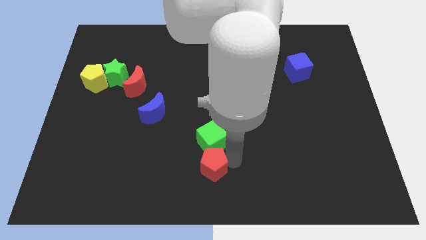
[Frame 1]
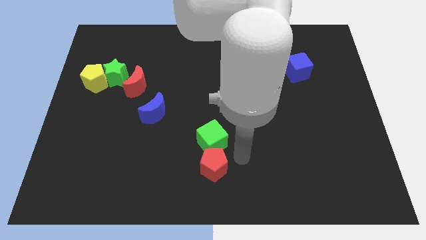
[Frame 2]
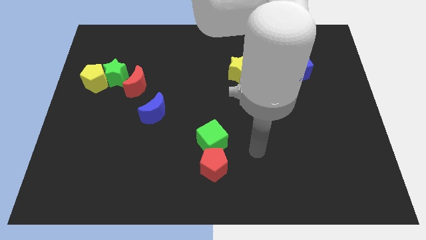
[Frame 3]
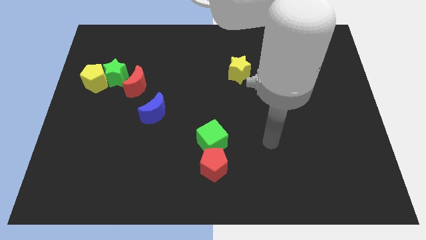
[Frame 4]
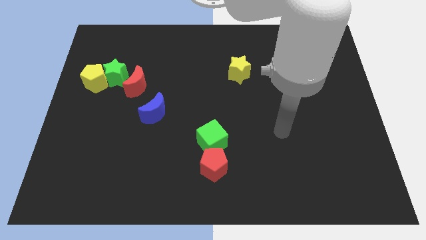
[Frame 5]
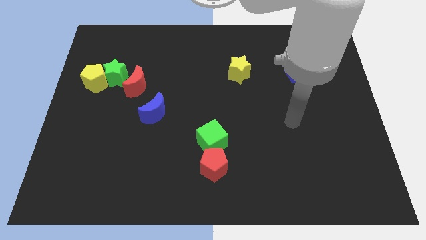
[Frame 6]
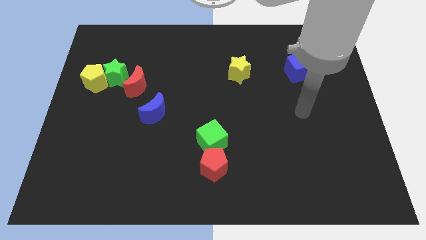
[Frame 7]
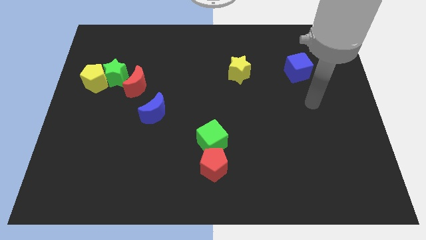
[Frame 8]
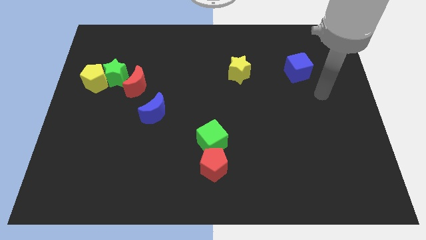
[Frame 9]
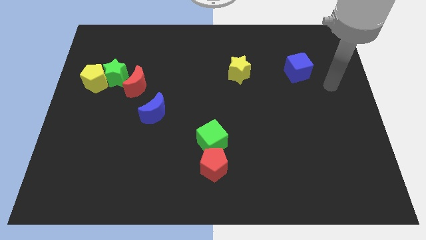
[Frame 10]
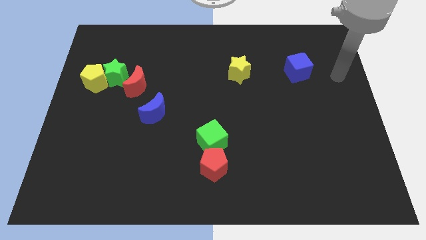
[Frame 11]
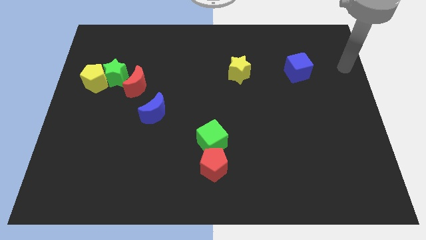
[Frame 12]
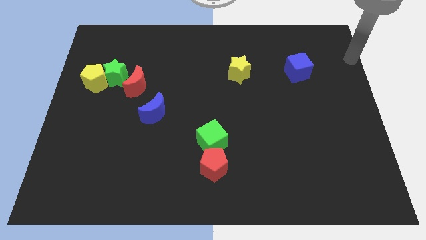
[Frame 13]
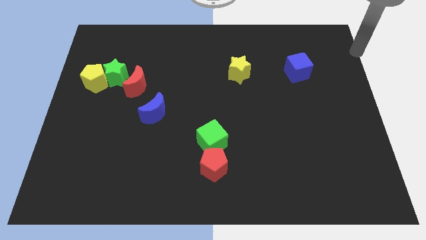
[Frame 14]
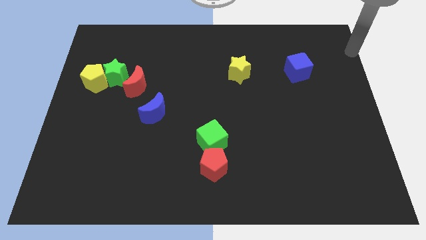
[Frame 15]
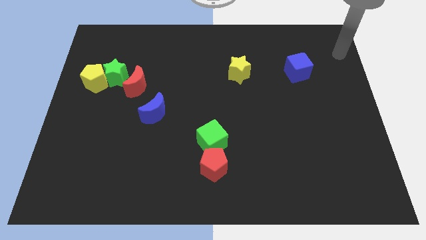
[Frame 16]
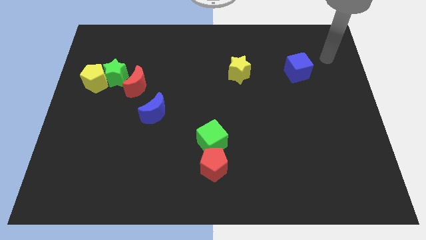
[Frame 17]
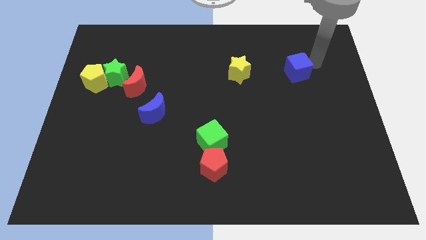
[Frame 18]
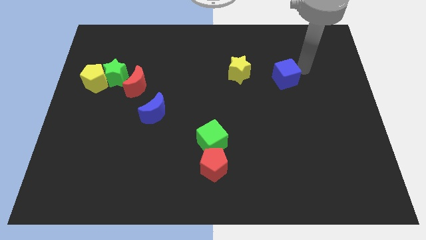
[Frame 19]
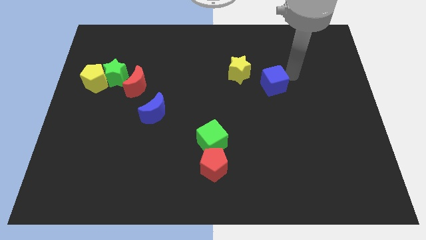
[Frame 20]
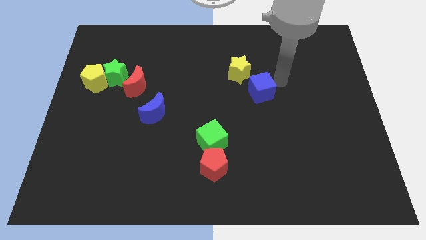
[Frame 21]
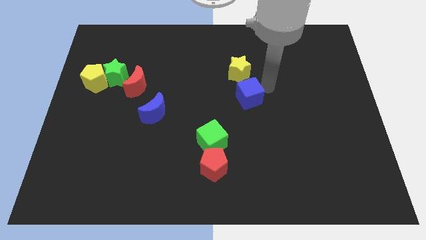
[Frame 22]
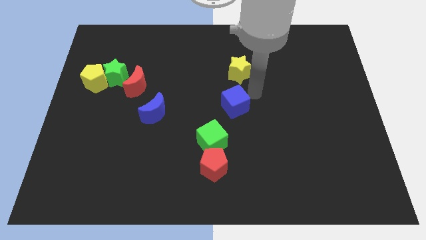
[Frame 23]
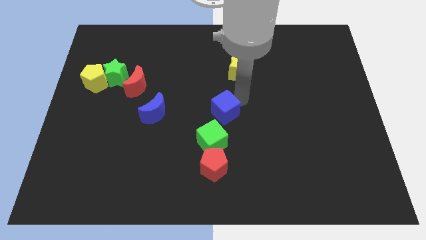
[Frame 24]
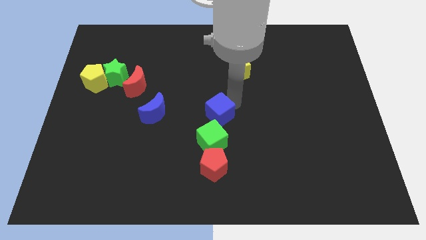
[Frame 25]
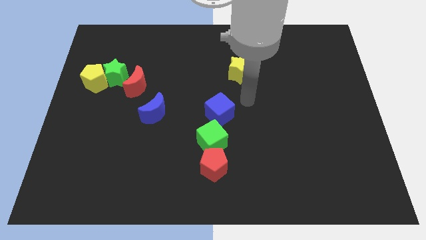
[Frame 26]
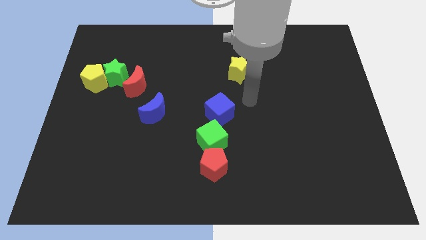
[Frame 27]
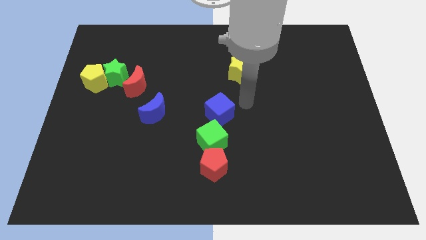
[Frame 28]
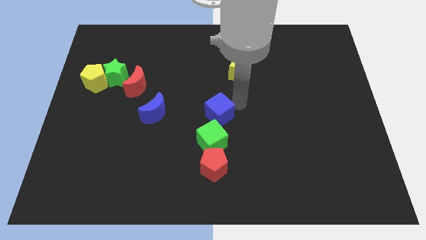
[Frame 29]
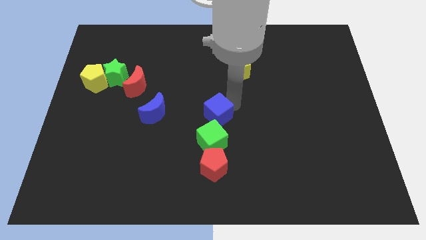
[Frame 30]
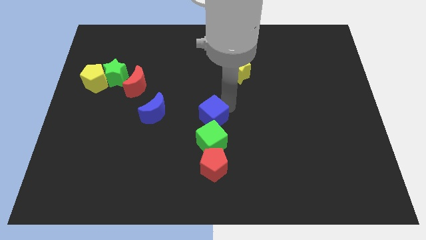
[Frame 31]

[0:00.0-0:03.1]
place the blue cube at the center of the board

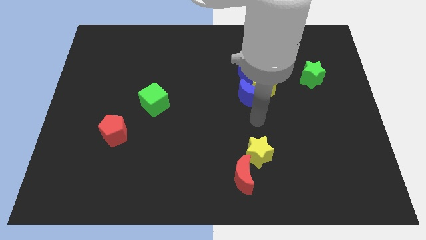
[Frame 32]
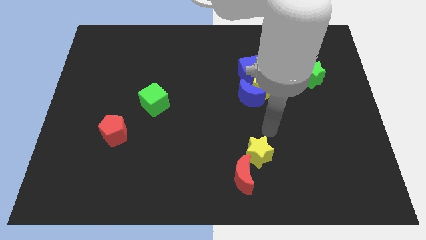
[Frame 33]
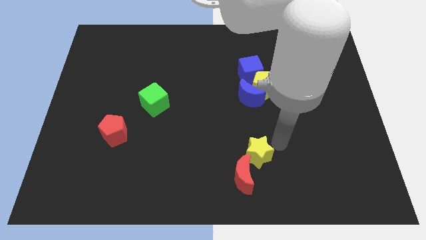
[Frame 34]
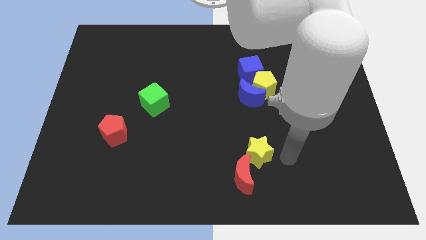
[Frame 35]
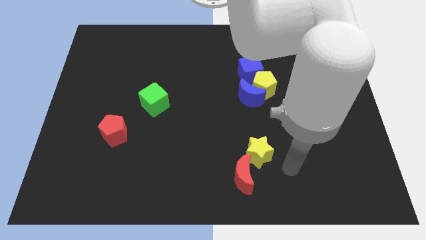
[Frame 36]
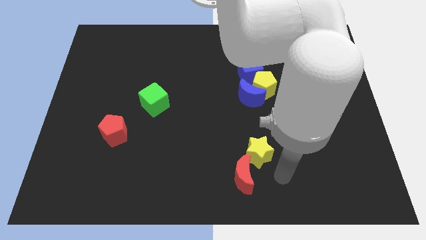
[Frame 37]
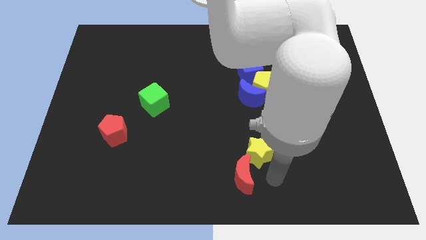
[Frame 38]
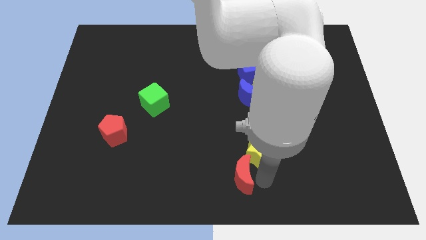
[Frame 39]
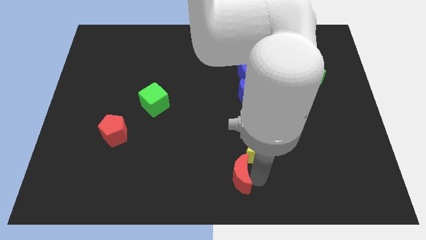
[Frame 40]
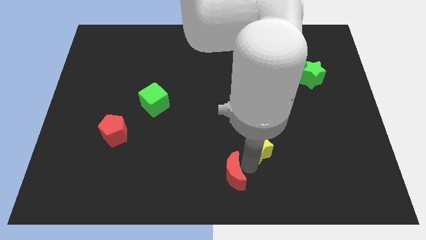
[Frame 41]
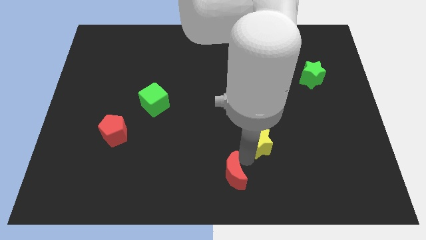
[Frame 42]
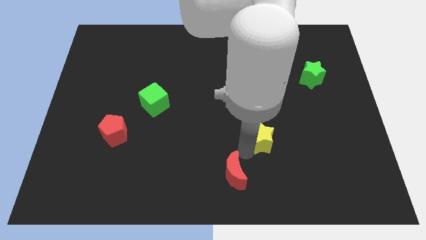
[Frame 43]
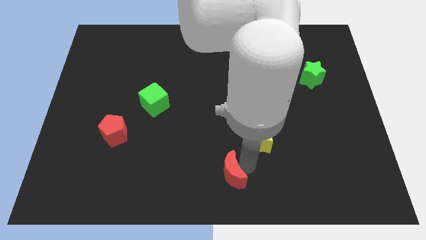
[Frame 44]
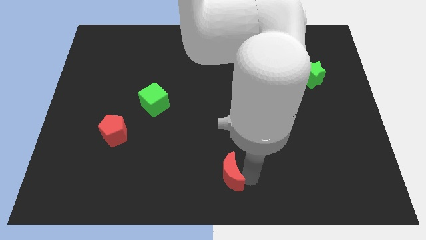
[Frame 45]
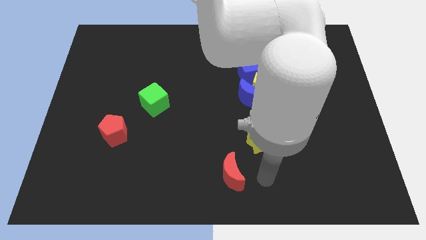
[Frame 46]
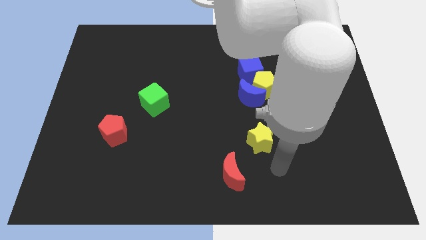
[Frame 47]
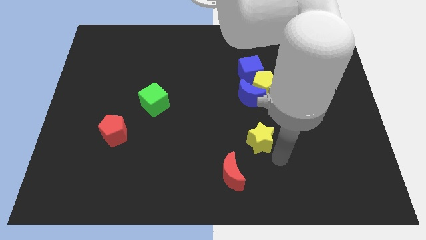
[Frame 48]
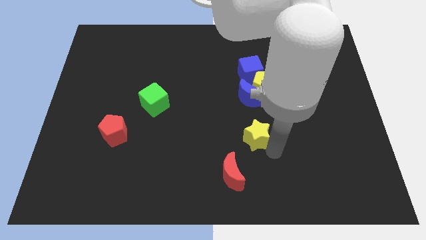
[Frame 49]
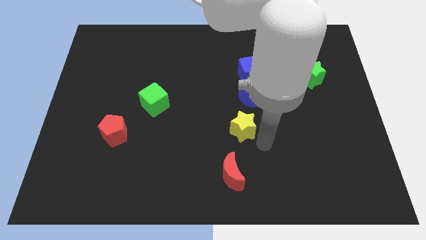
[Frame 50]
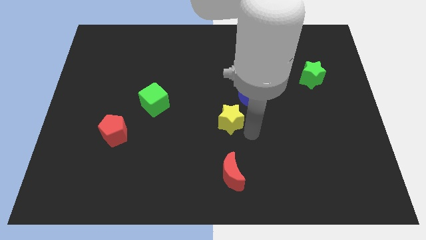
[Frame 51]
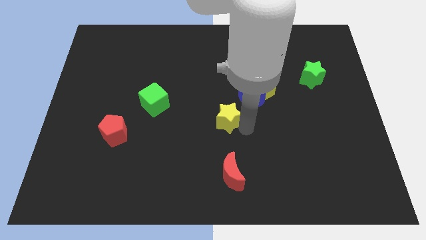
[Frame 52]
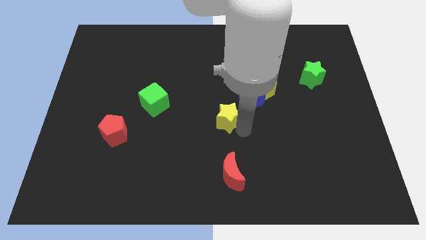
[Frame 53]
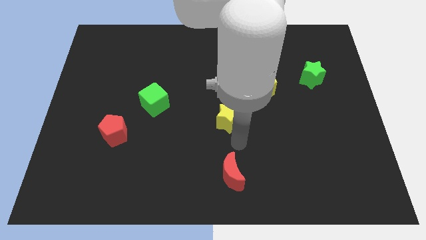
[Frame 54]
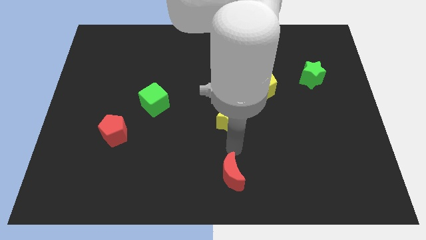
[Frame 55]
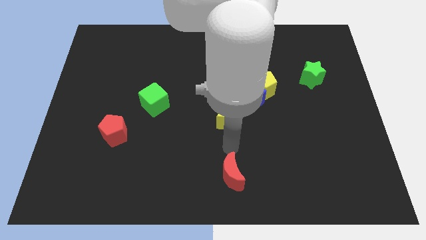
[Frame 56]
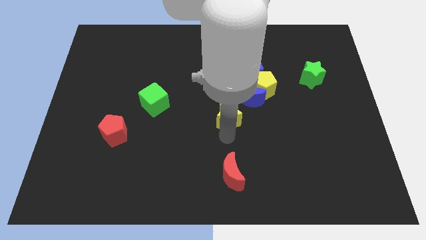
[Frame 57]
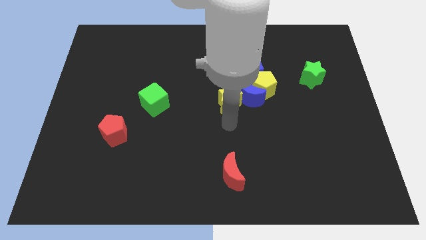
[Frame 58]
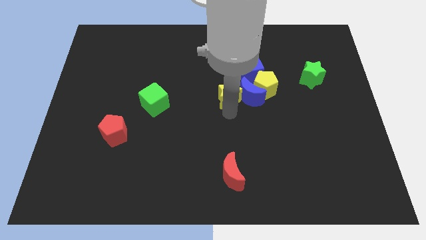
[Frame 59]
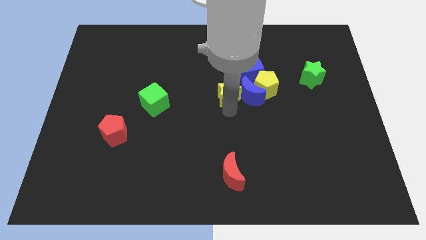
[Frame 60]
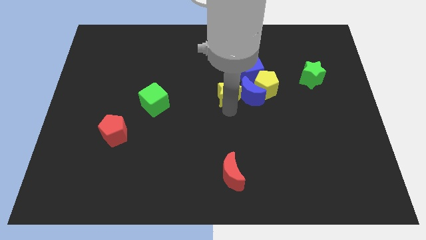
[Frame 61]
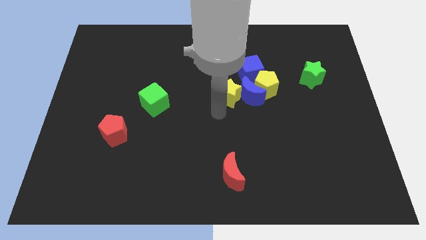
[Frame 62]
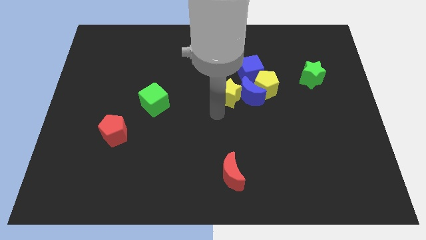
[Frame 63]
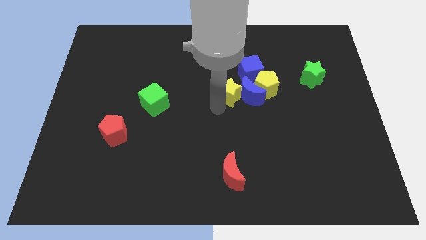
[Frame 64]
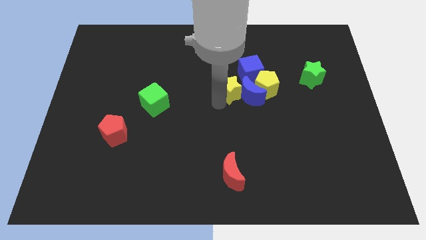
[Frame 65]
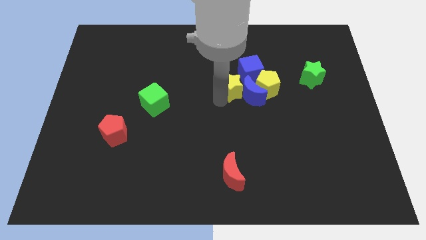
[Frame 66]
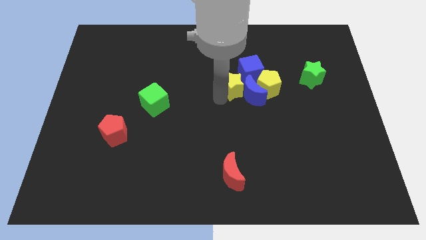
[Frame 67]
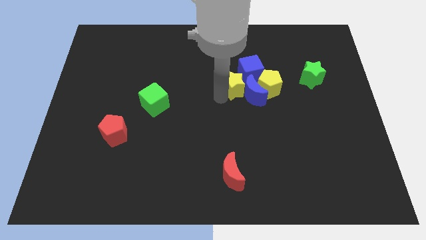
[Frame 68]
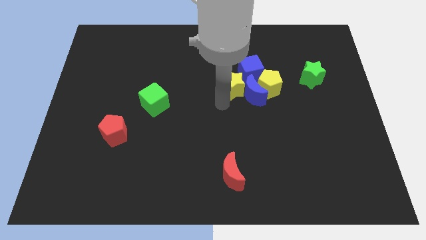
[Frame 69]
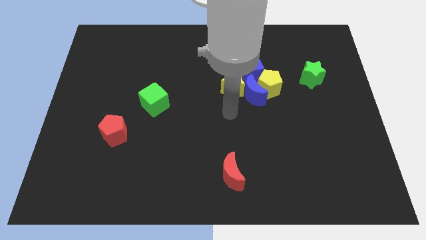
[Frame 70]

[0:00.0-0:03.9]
push the yellow star to the left side of the blue moon

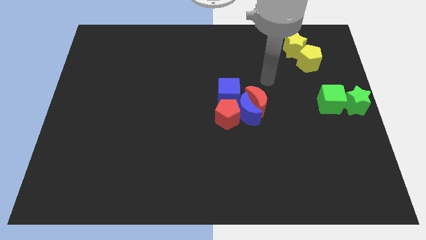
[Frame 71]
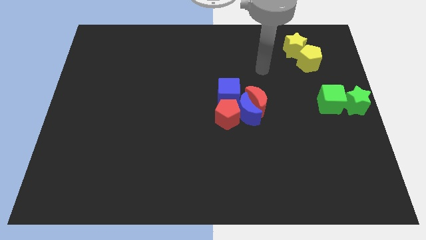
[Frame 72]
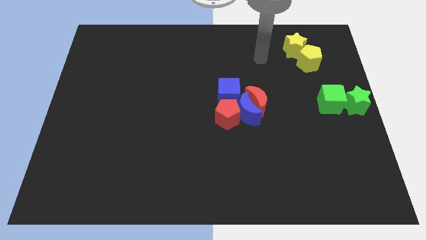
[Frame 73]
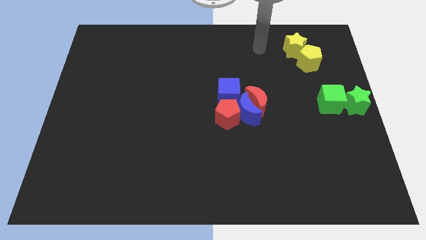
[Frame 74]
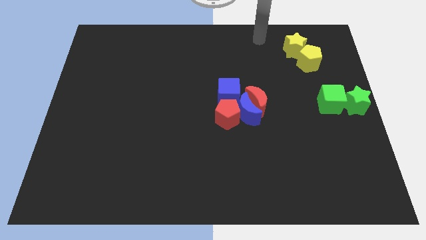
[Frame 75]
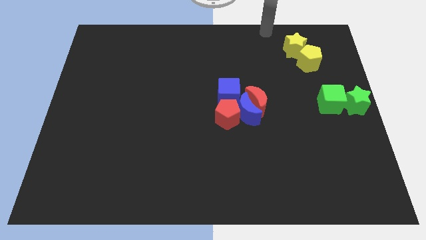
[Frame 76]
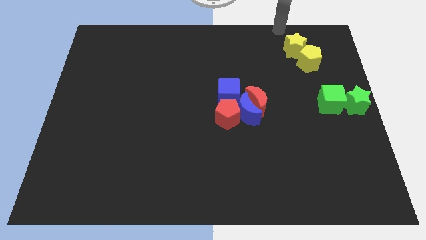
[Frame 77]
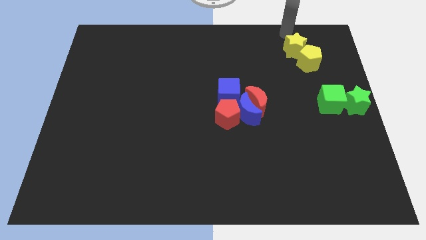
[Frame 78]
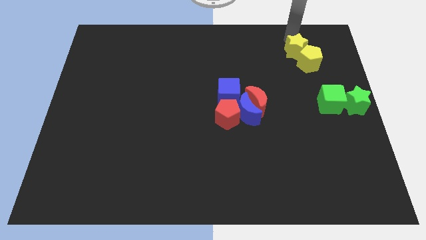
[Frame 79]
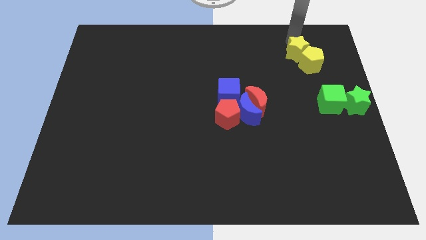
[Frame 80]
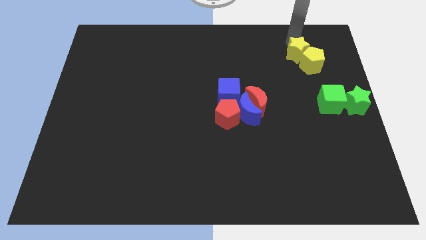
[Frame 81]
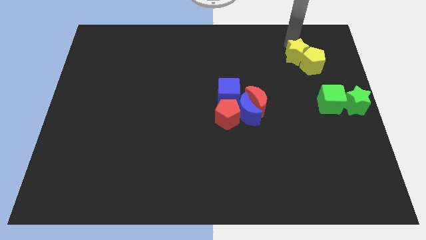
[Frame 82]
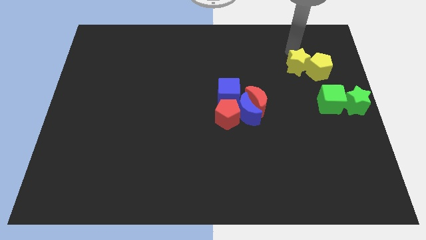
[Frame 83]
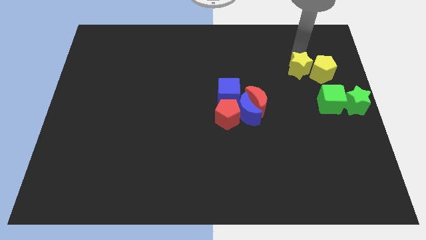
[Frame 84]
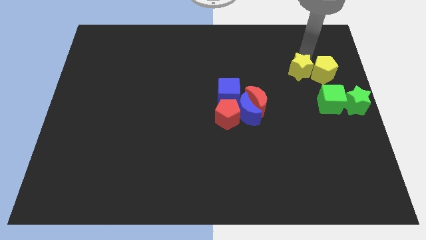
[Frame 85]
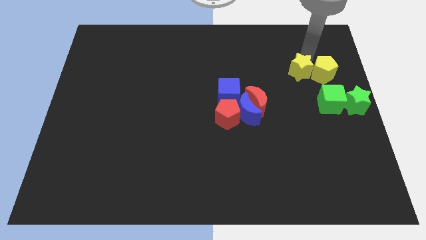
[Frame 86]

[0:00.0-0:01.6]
slightly move the yellow blocks towards down

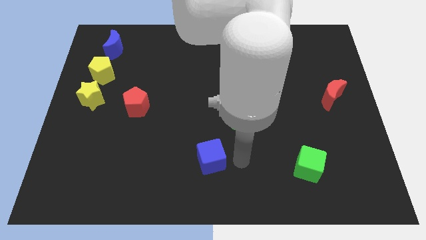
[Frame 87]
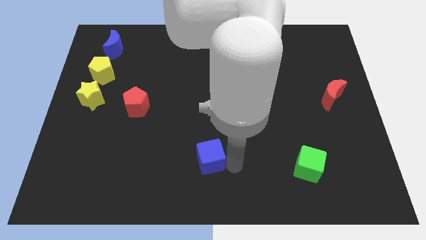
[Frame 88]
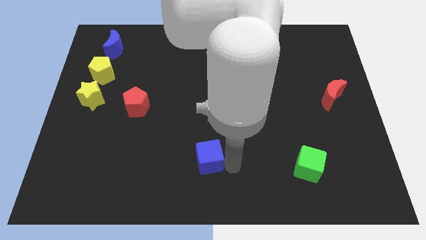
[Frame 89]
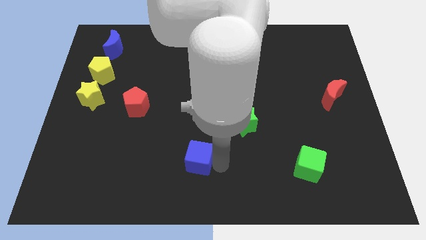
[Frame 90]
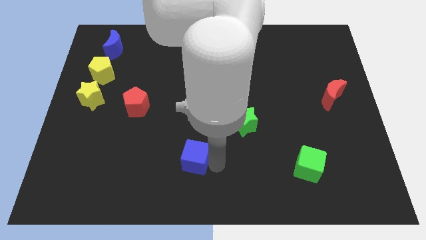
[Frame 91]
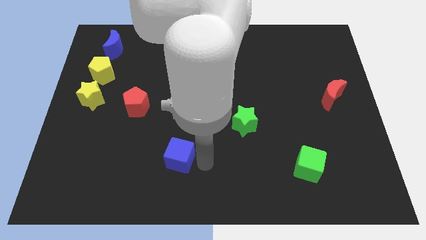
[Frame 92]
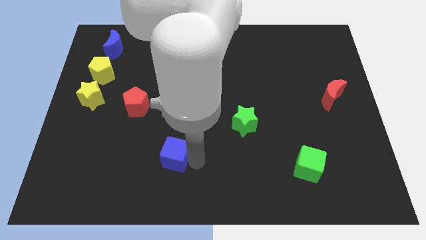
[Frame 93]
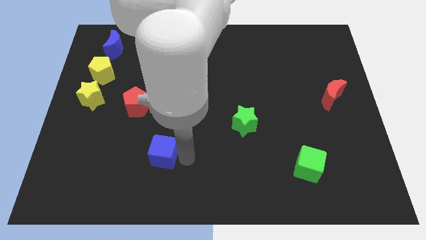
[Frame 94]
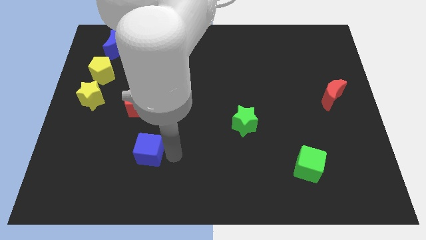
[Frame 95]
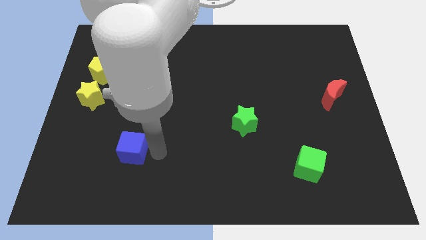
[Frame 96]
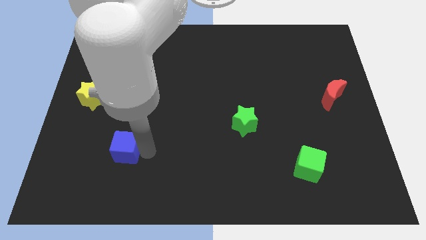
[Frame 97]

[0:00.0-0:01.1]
place the blue cube at the bottom of red pentagon
